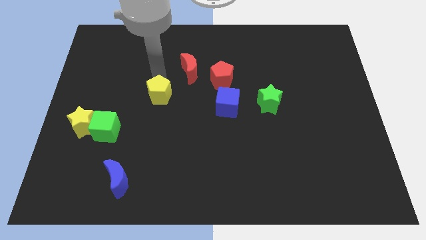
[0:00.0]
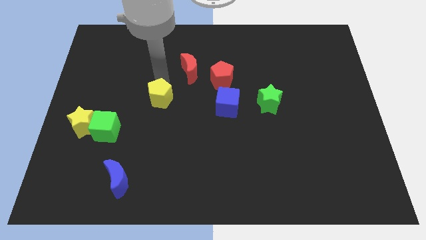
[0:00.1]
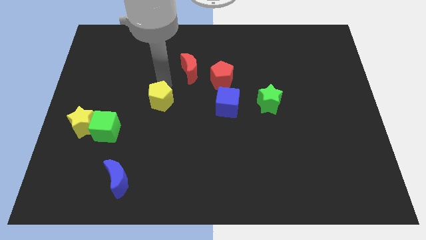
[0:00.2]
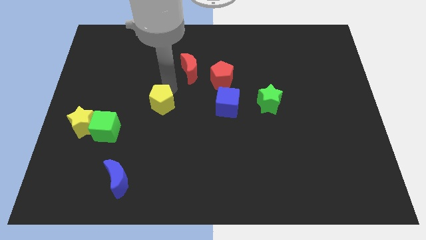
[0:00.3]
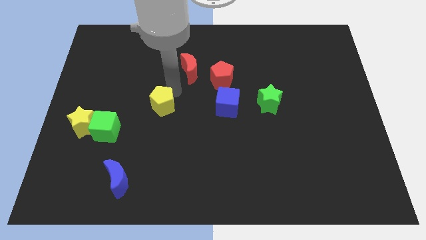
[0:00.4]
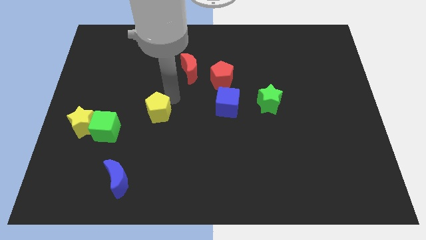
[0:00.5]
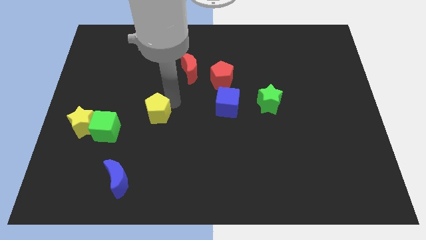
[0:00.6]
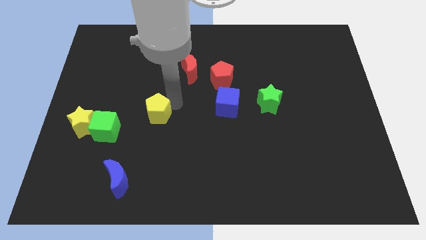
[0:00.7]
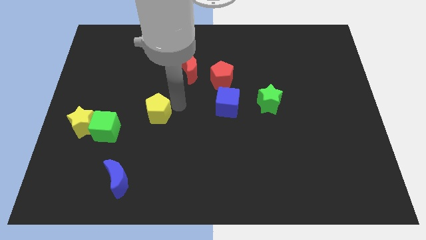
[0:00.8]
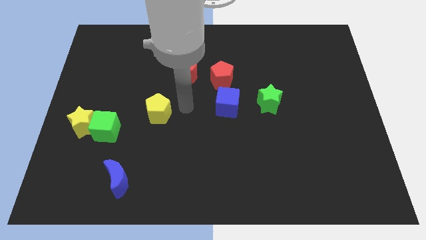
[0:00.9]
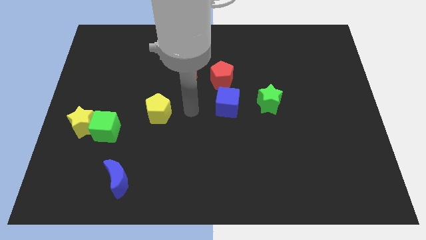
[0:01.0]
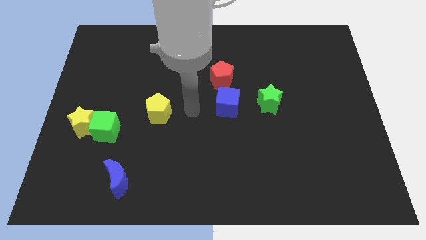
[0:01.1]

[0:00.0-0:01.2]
slide yellow pentagon slightly down

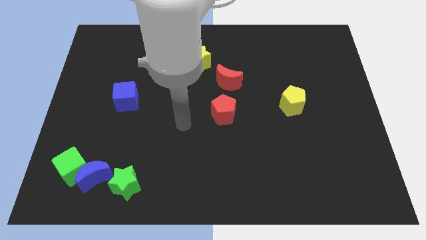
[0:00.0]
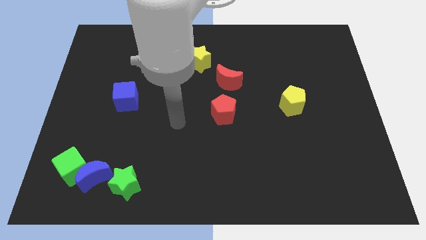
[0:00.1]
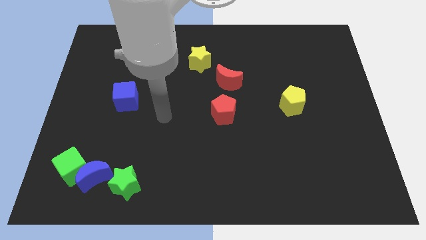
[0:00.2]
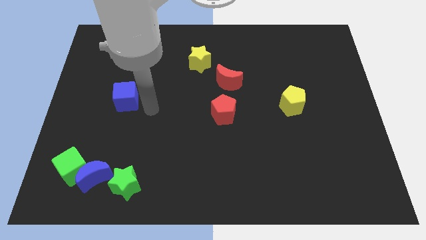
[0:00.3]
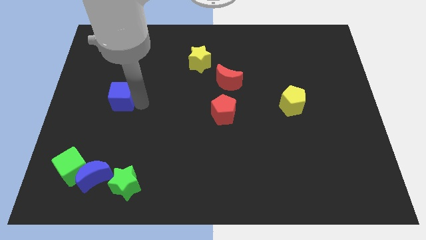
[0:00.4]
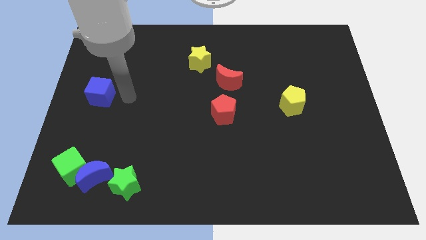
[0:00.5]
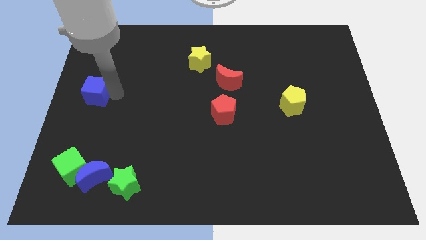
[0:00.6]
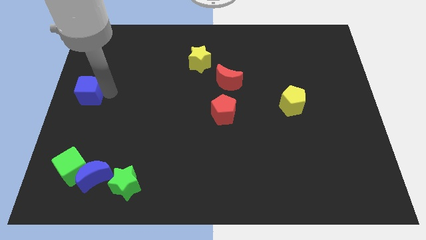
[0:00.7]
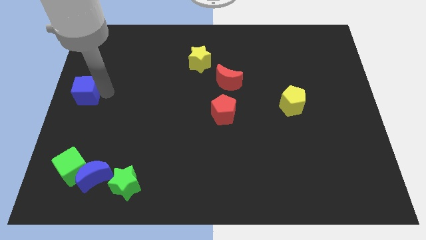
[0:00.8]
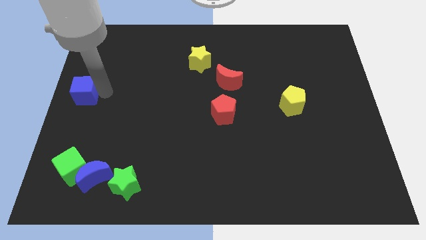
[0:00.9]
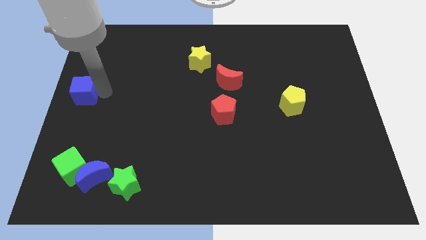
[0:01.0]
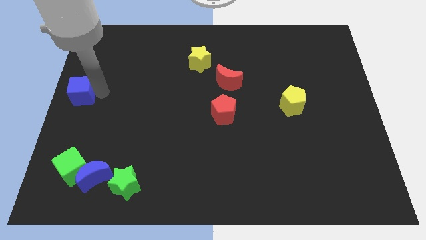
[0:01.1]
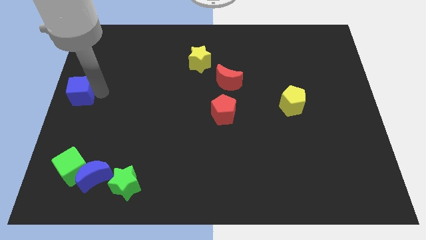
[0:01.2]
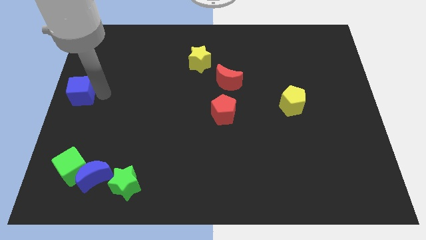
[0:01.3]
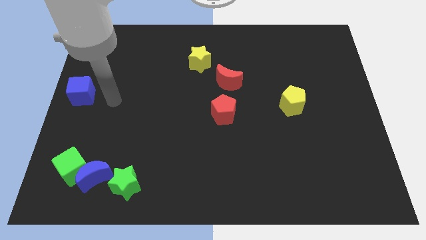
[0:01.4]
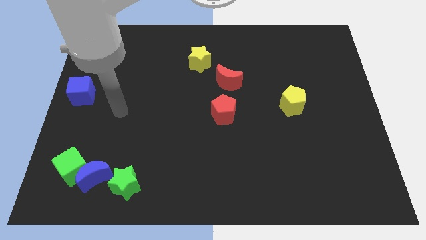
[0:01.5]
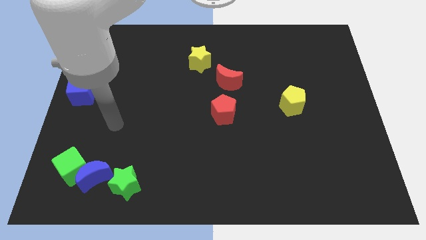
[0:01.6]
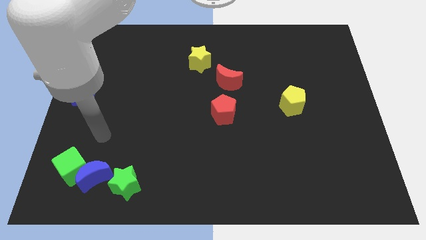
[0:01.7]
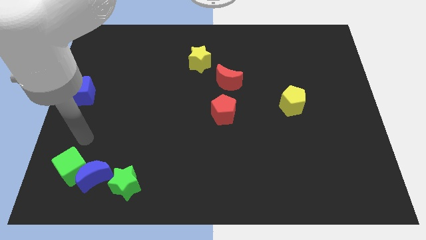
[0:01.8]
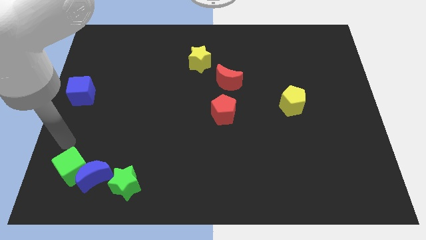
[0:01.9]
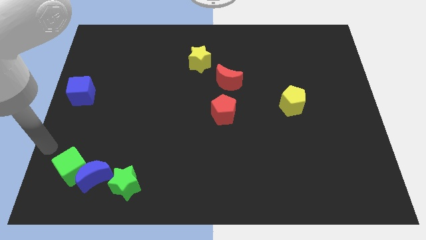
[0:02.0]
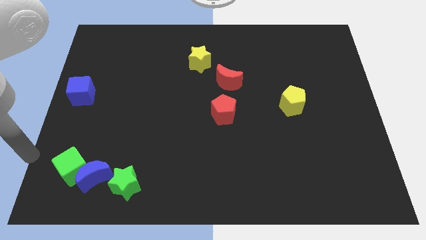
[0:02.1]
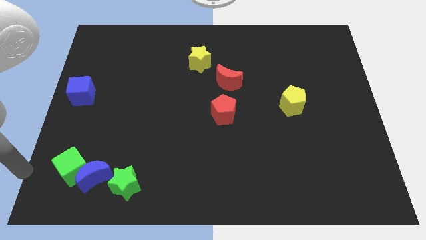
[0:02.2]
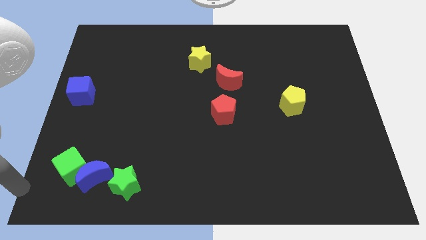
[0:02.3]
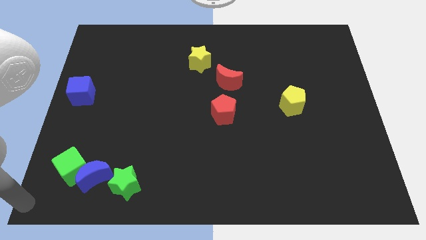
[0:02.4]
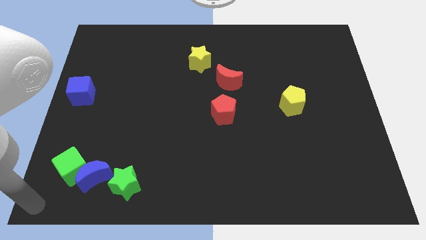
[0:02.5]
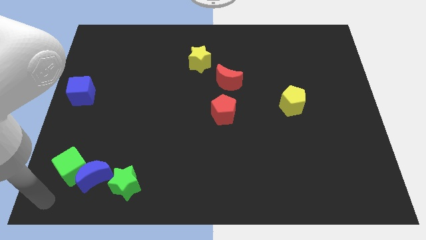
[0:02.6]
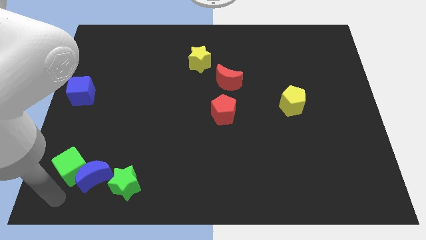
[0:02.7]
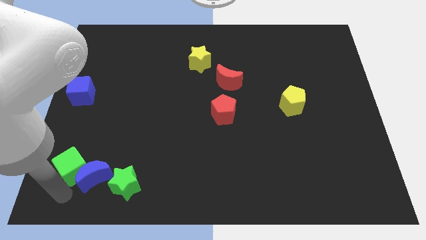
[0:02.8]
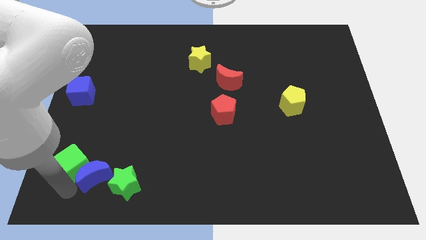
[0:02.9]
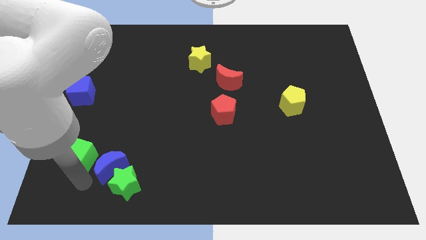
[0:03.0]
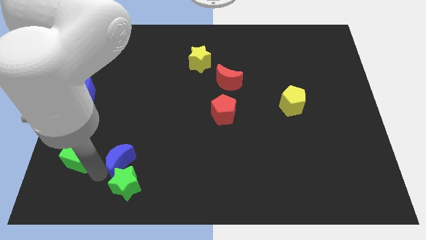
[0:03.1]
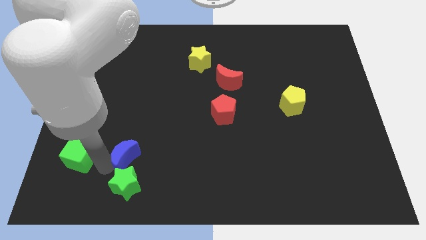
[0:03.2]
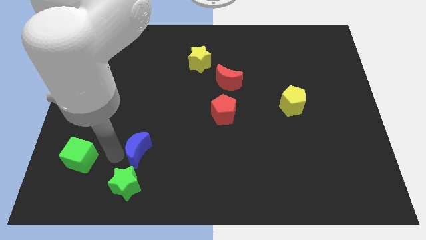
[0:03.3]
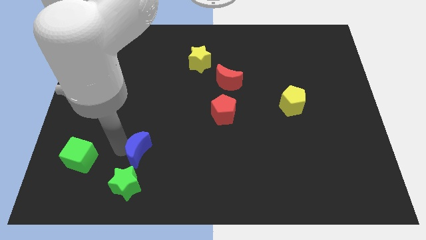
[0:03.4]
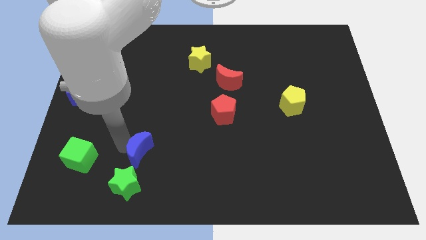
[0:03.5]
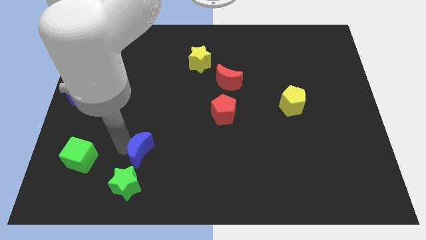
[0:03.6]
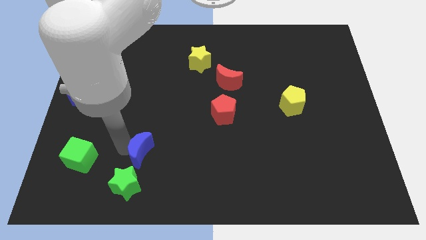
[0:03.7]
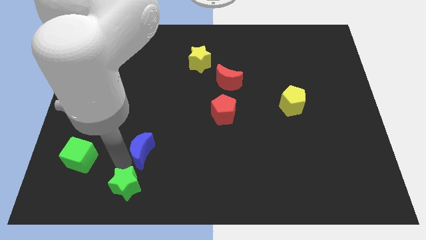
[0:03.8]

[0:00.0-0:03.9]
push the blue blocks in different directions

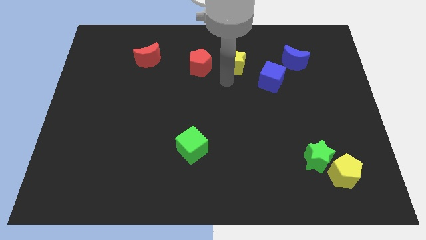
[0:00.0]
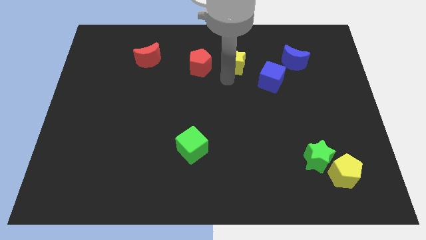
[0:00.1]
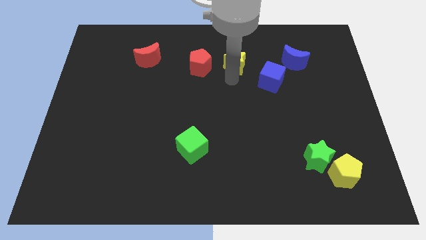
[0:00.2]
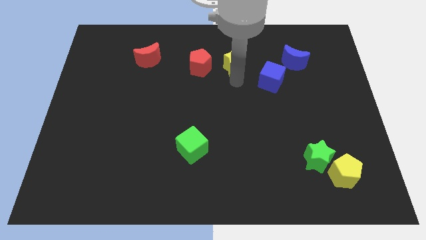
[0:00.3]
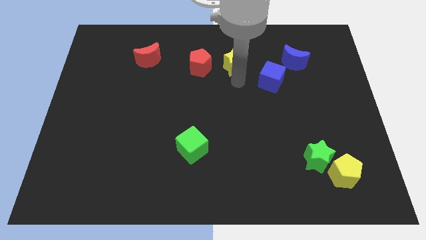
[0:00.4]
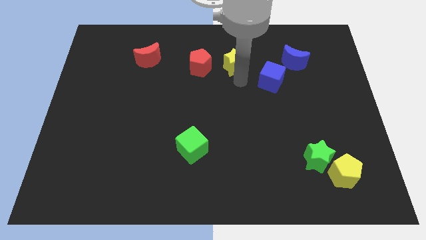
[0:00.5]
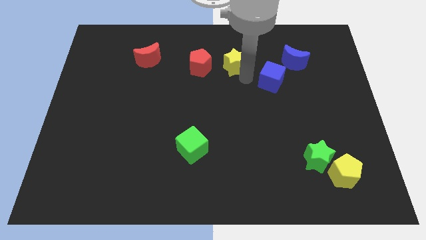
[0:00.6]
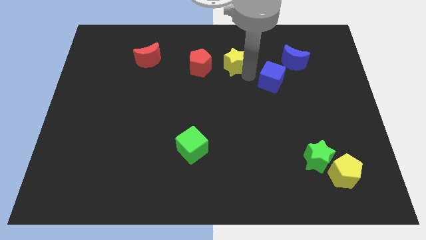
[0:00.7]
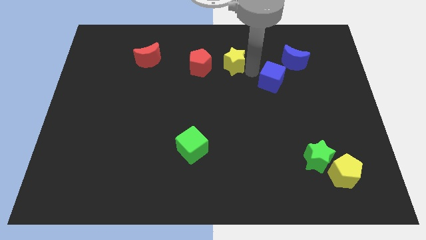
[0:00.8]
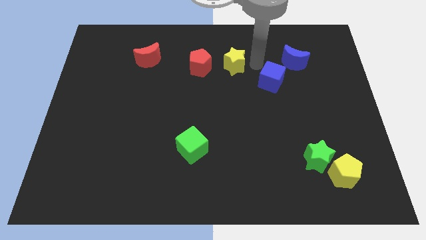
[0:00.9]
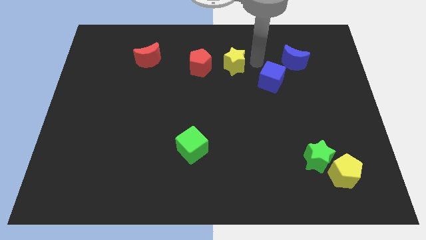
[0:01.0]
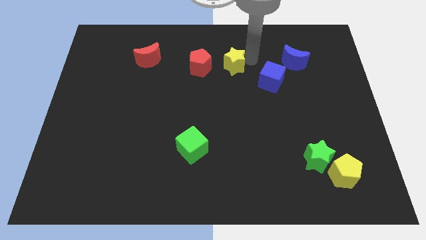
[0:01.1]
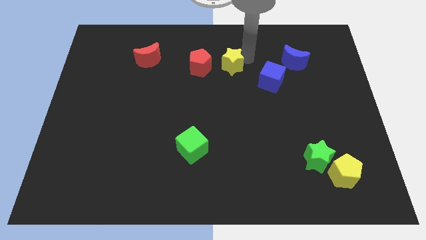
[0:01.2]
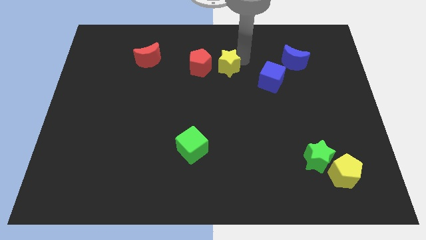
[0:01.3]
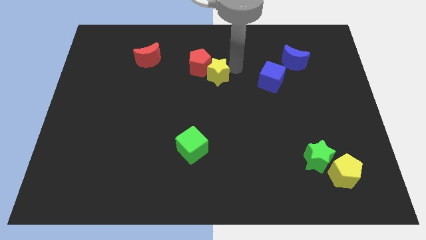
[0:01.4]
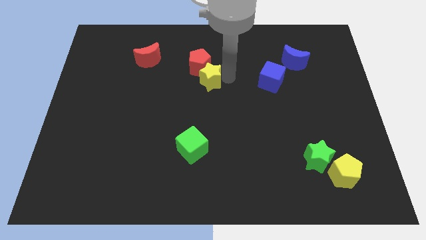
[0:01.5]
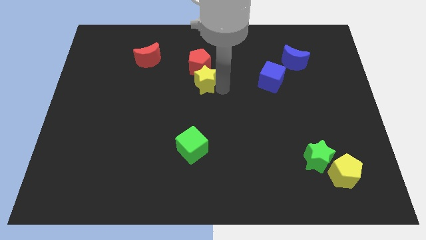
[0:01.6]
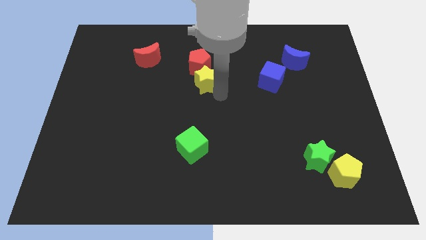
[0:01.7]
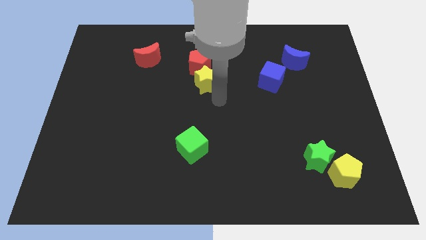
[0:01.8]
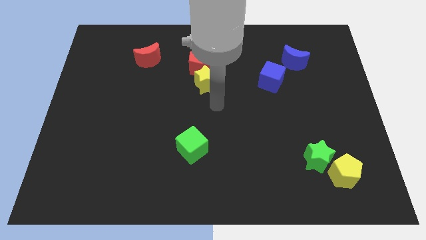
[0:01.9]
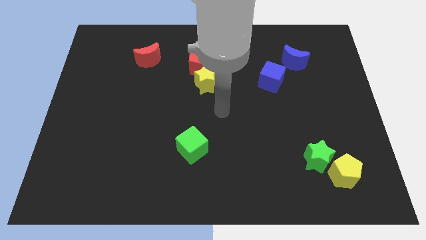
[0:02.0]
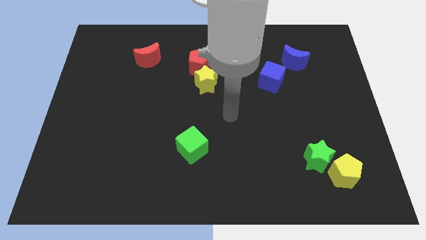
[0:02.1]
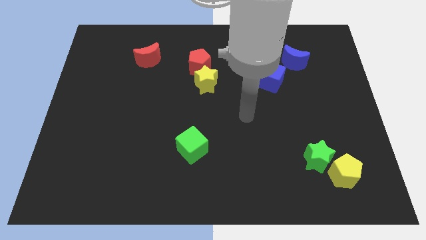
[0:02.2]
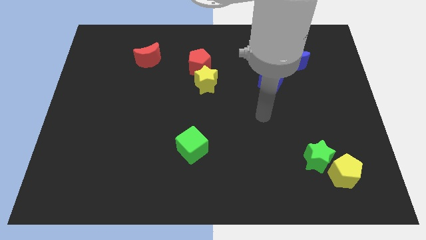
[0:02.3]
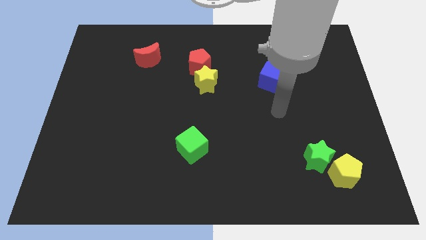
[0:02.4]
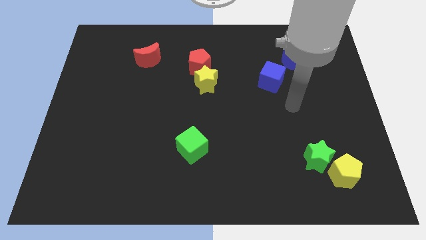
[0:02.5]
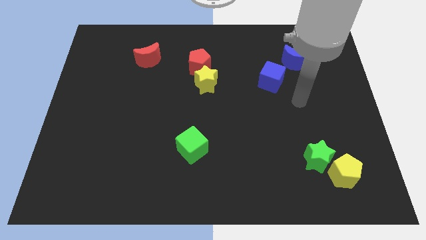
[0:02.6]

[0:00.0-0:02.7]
move the yellow star below the red pentagon

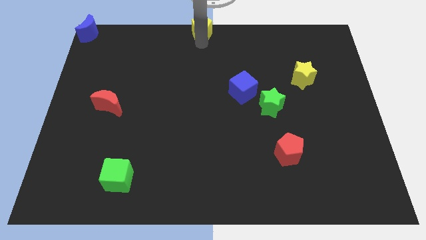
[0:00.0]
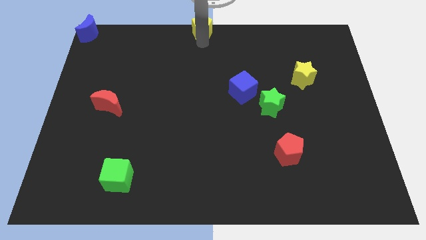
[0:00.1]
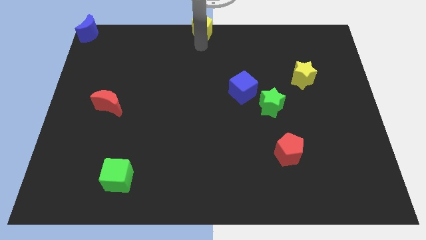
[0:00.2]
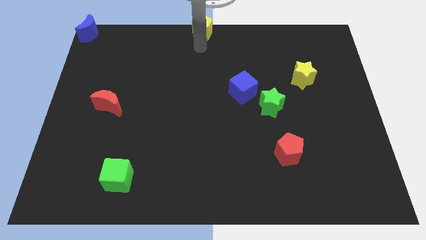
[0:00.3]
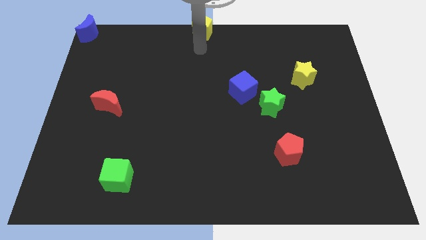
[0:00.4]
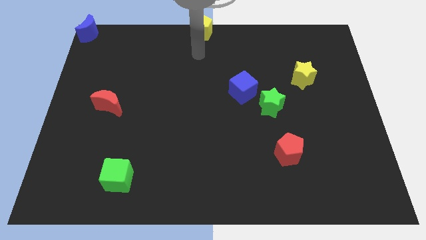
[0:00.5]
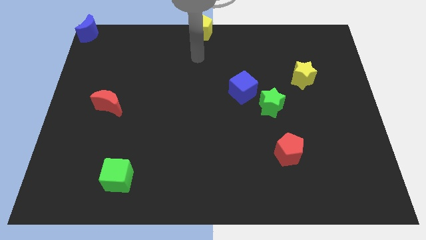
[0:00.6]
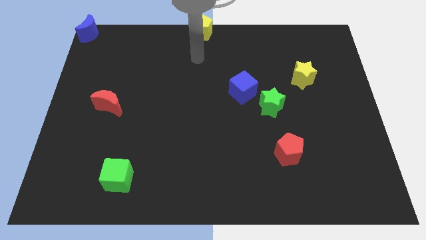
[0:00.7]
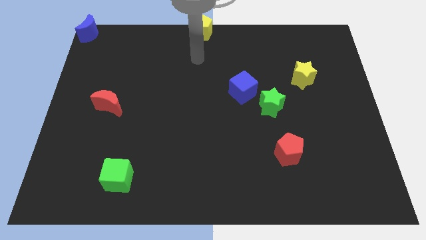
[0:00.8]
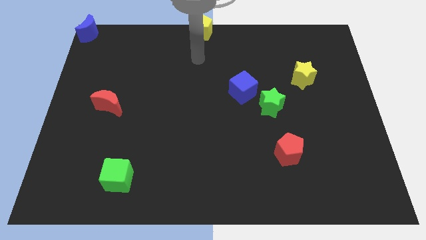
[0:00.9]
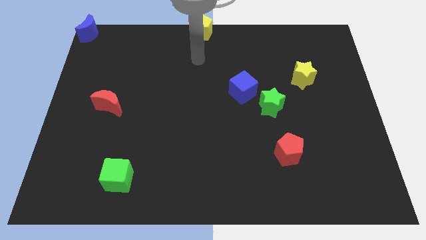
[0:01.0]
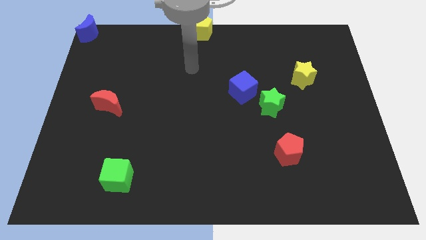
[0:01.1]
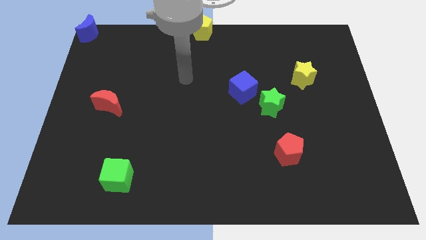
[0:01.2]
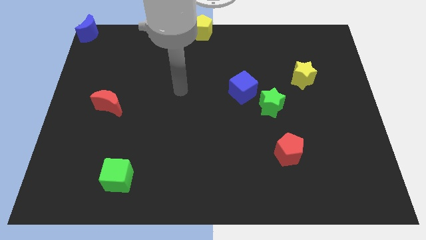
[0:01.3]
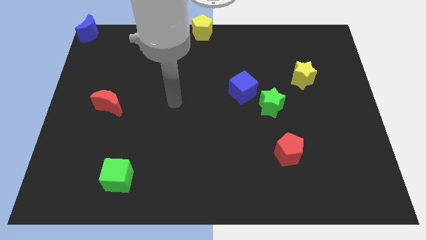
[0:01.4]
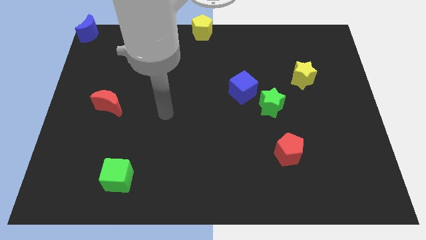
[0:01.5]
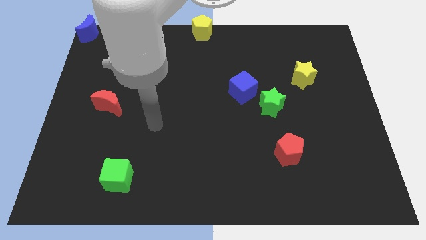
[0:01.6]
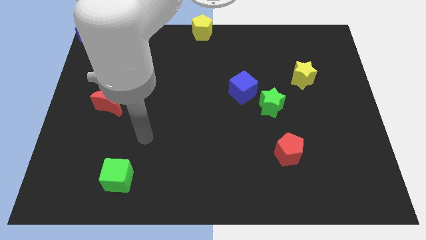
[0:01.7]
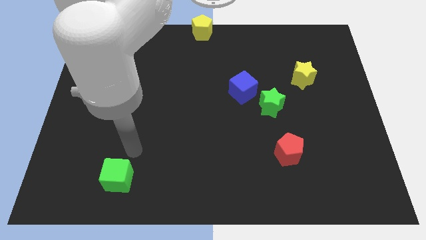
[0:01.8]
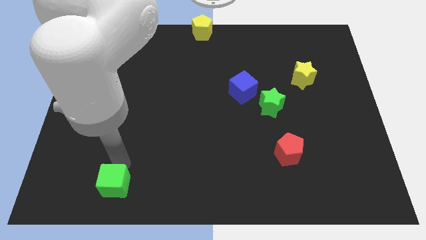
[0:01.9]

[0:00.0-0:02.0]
touch the green cube with your arm
